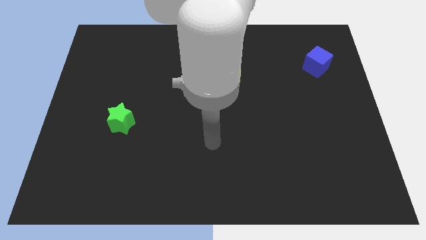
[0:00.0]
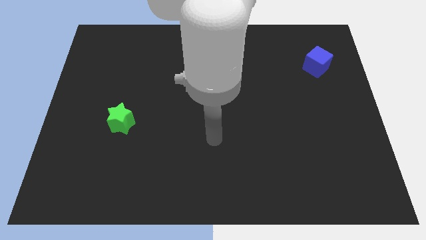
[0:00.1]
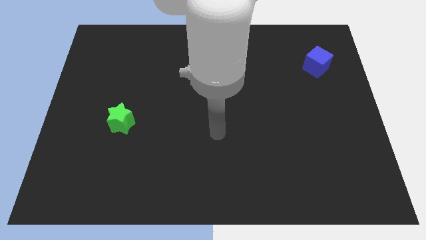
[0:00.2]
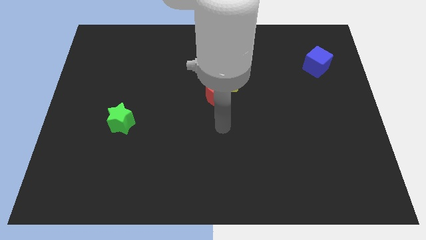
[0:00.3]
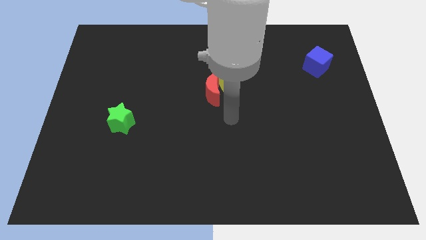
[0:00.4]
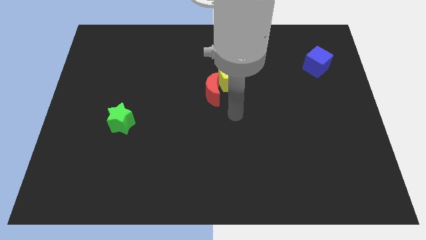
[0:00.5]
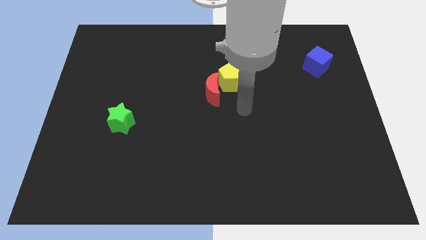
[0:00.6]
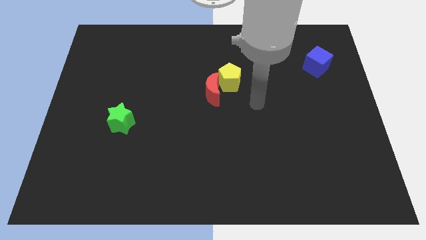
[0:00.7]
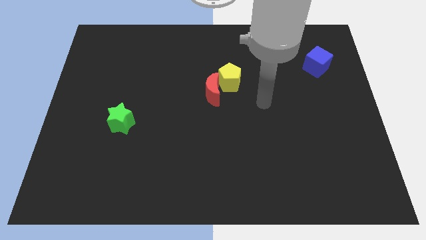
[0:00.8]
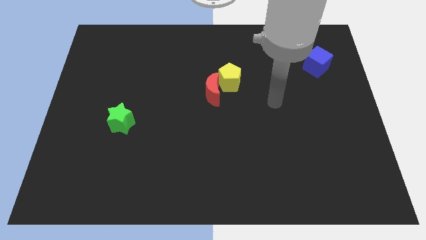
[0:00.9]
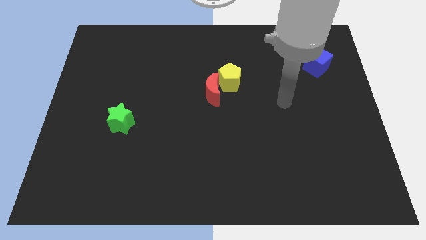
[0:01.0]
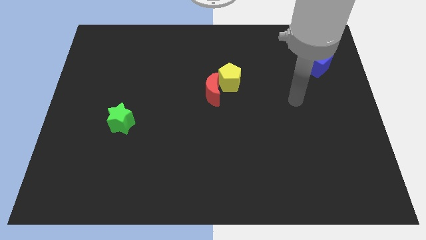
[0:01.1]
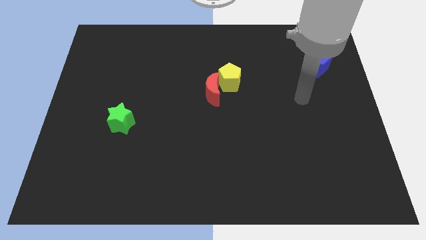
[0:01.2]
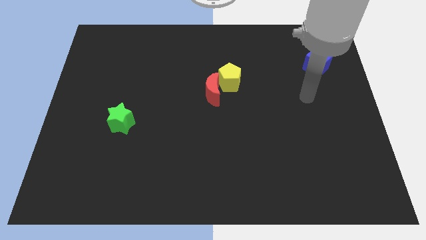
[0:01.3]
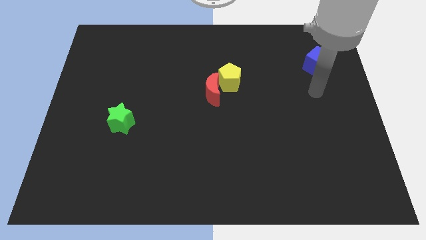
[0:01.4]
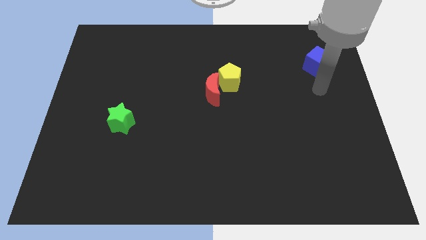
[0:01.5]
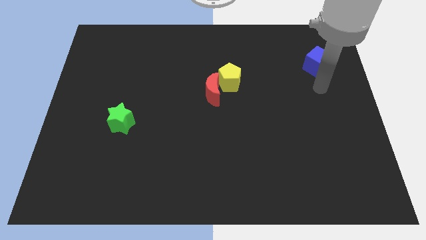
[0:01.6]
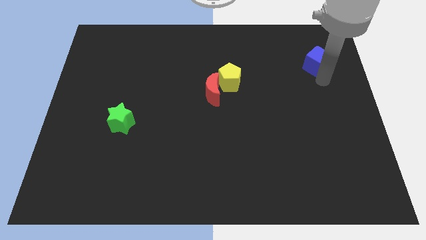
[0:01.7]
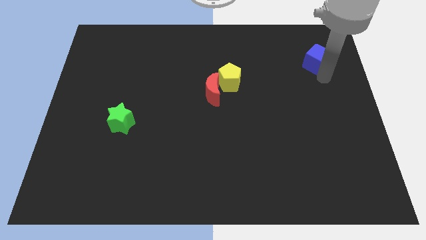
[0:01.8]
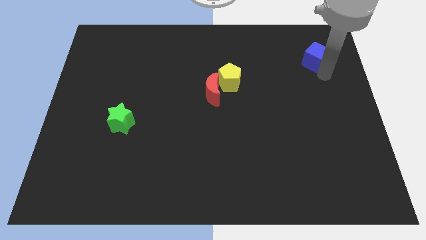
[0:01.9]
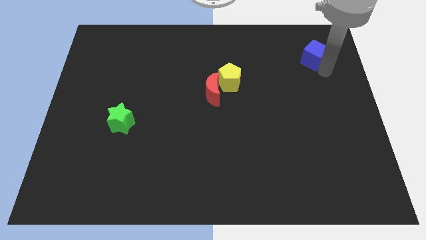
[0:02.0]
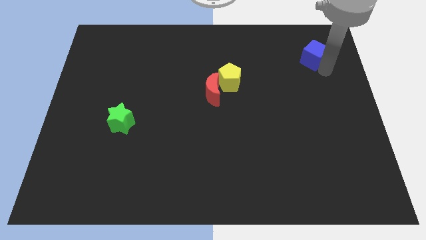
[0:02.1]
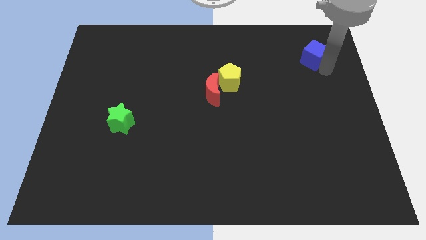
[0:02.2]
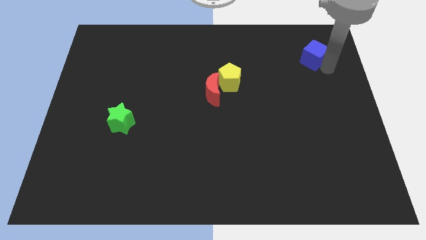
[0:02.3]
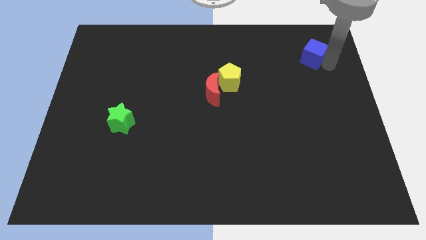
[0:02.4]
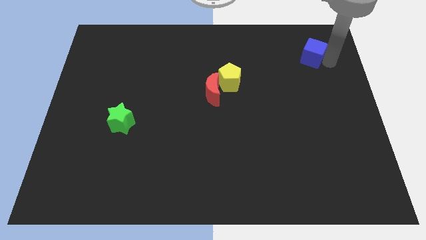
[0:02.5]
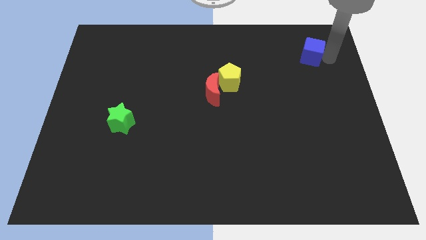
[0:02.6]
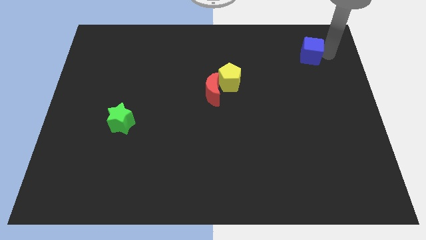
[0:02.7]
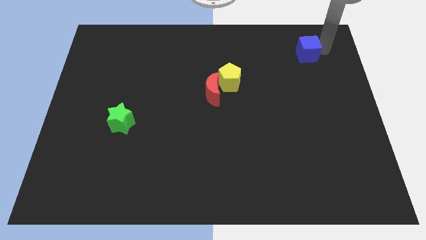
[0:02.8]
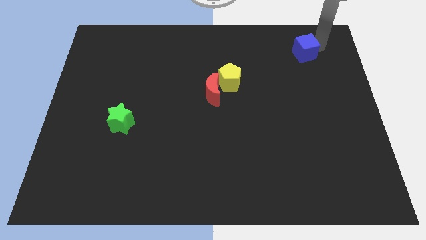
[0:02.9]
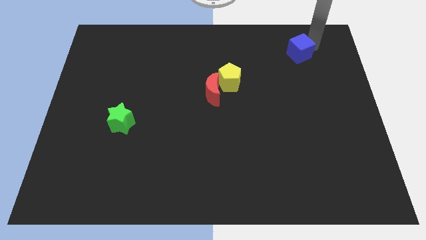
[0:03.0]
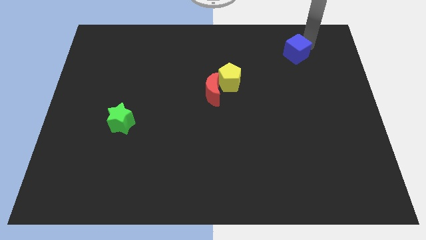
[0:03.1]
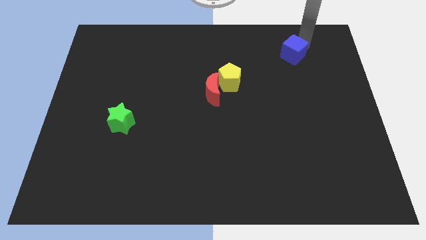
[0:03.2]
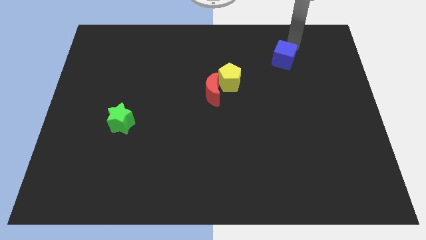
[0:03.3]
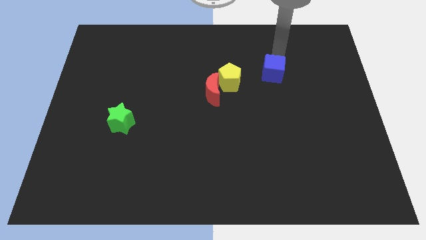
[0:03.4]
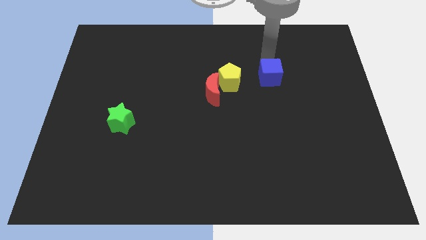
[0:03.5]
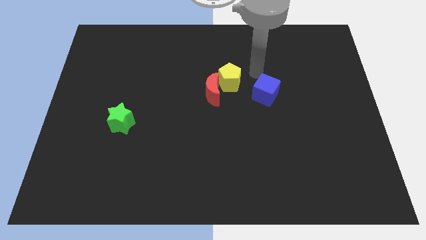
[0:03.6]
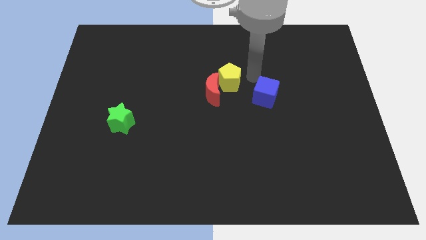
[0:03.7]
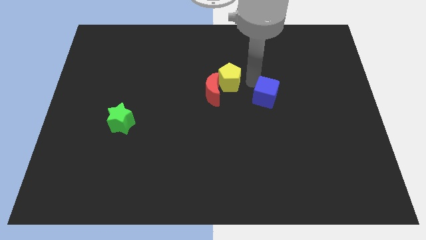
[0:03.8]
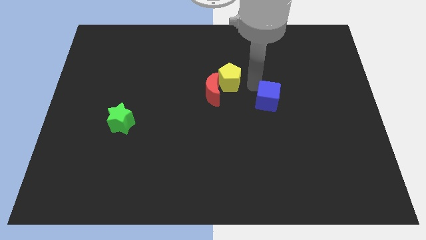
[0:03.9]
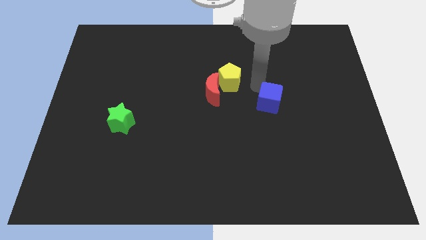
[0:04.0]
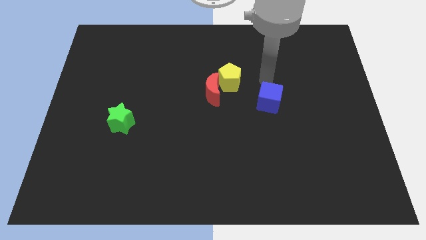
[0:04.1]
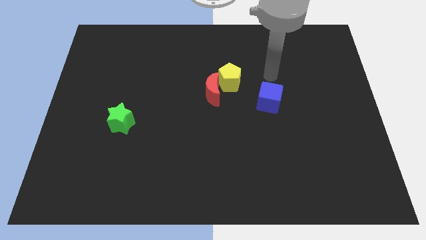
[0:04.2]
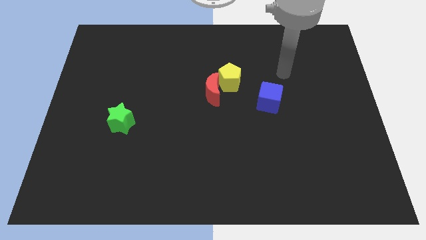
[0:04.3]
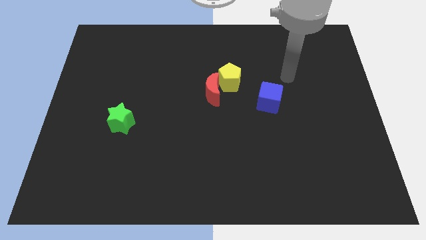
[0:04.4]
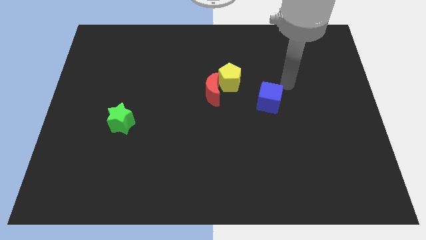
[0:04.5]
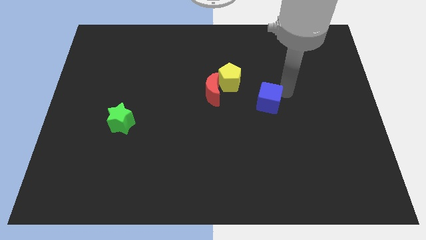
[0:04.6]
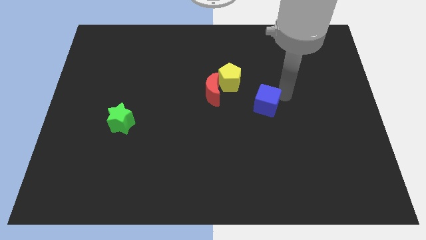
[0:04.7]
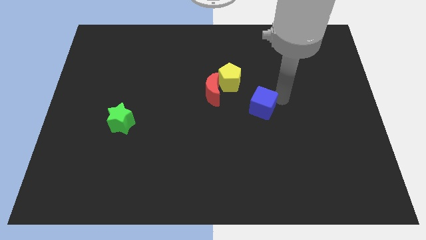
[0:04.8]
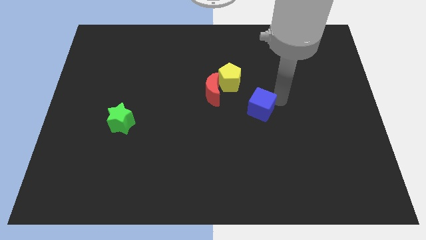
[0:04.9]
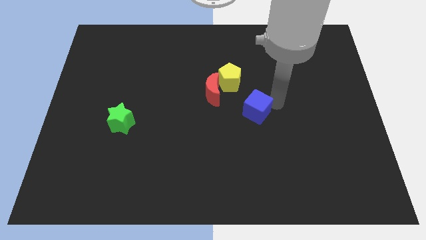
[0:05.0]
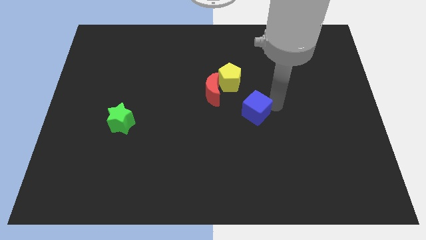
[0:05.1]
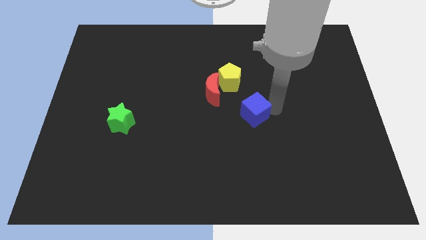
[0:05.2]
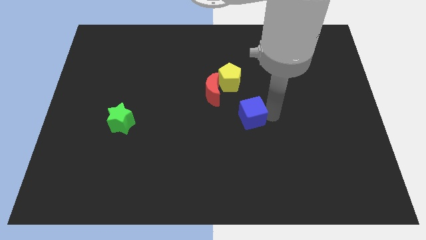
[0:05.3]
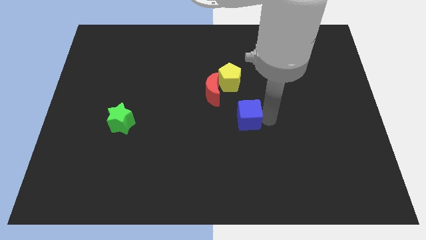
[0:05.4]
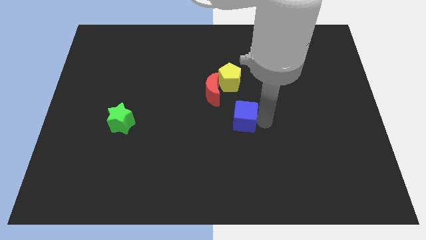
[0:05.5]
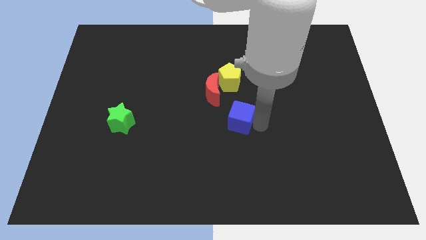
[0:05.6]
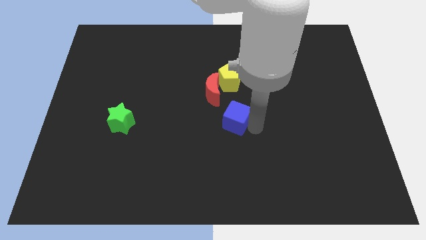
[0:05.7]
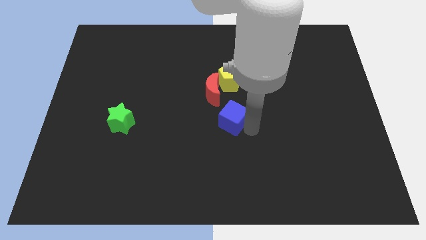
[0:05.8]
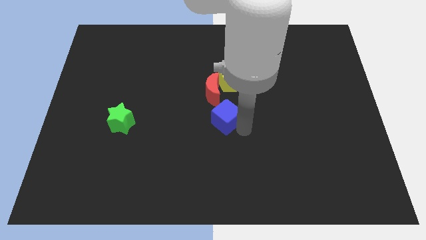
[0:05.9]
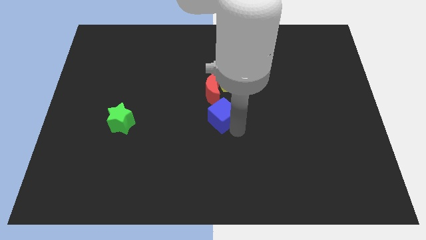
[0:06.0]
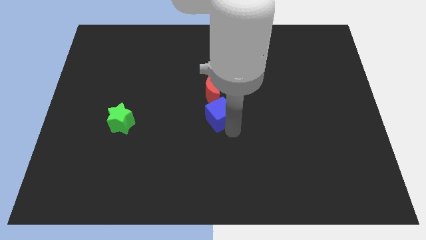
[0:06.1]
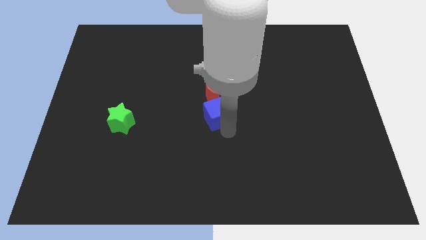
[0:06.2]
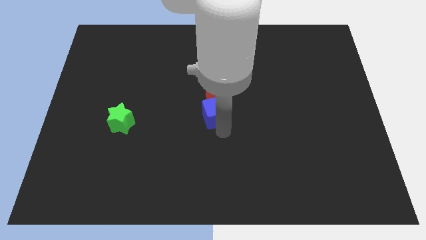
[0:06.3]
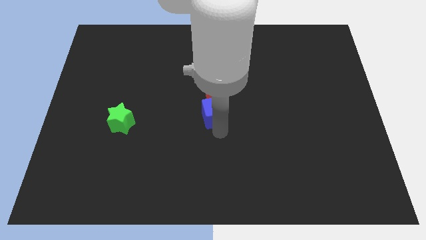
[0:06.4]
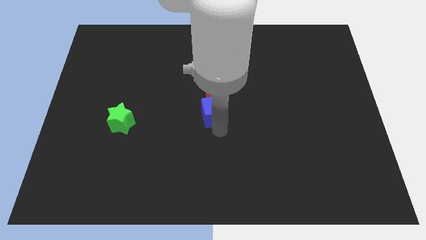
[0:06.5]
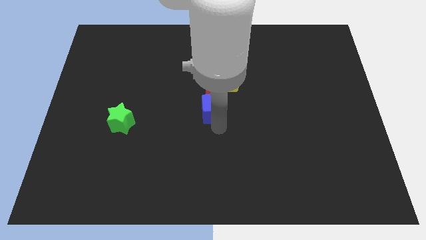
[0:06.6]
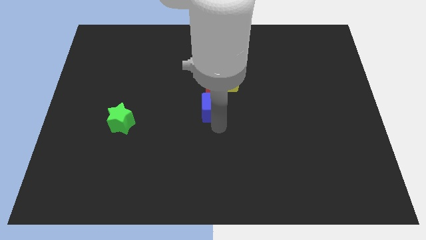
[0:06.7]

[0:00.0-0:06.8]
push the blue cube towards the moon

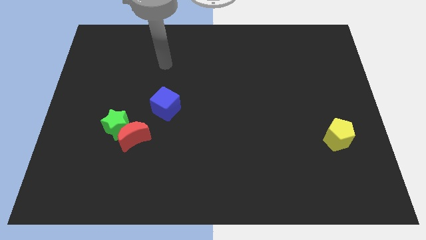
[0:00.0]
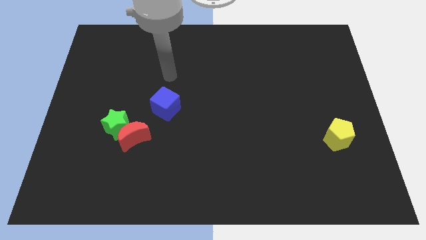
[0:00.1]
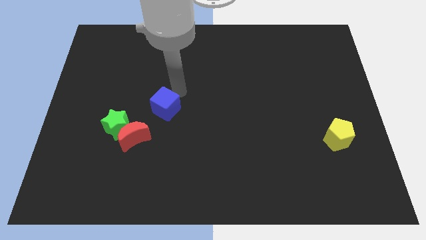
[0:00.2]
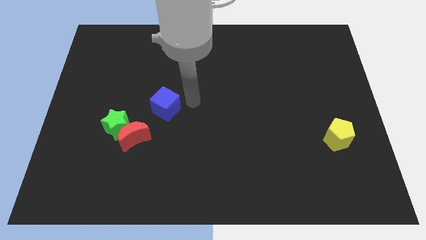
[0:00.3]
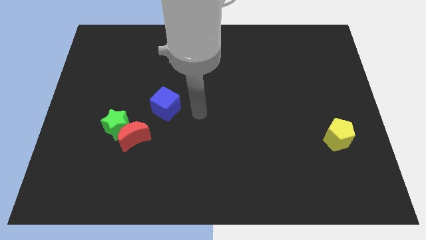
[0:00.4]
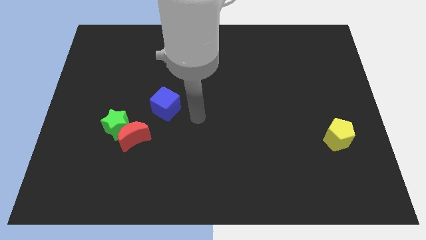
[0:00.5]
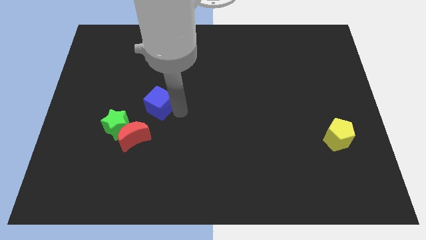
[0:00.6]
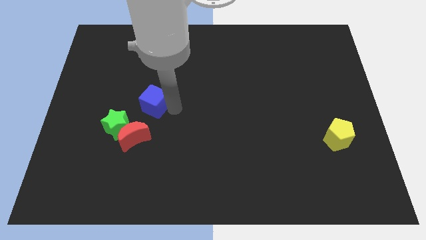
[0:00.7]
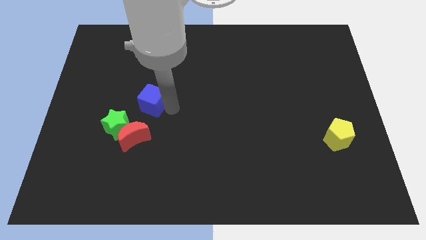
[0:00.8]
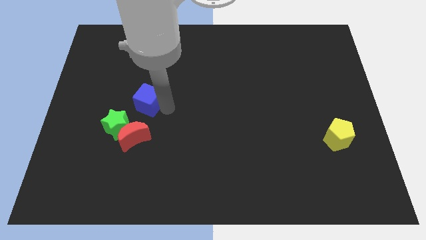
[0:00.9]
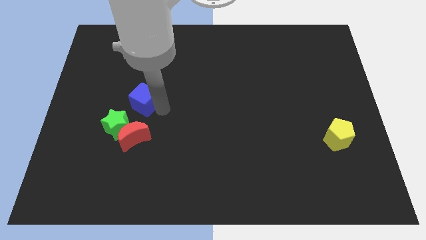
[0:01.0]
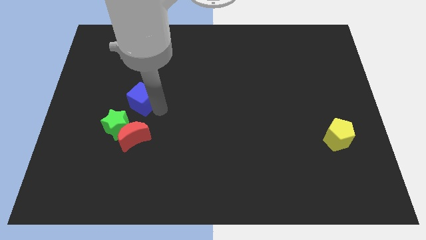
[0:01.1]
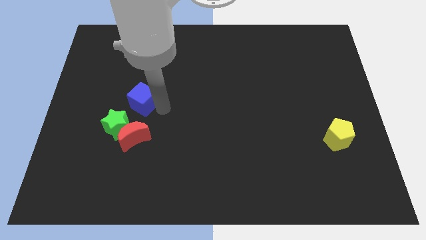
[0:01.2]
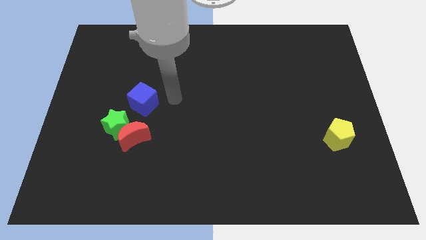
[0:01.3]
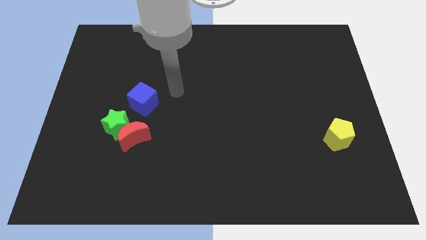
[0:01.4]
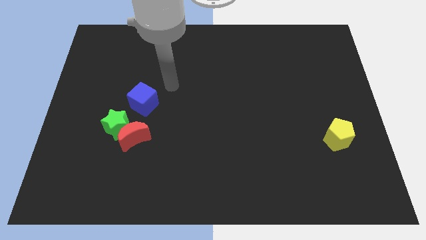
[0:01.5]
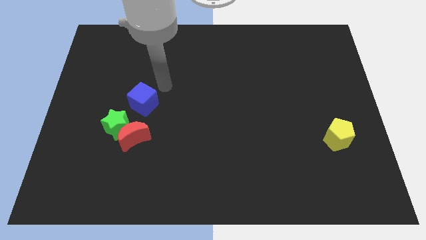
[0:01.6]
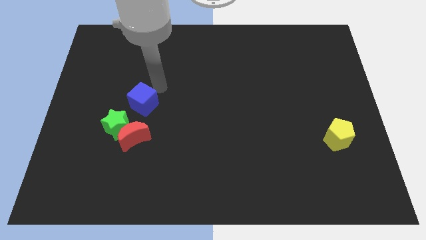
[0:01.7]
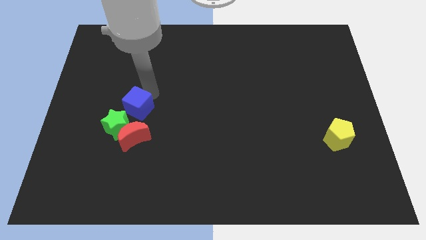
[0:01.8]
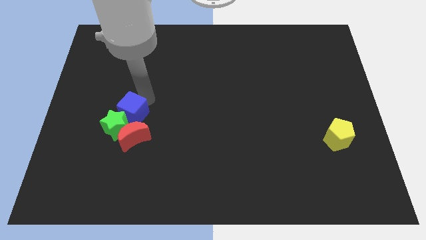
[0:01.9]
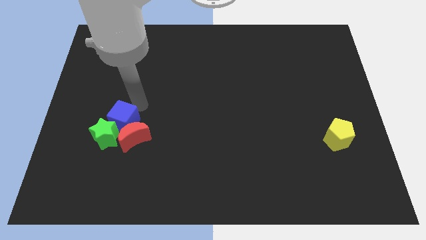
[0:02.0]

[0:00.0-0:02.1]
put the blue cube close to the green star
